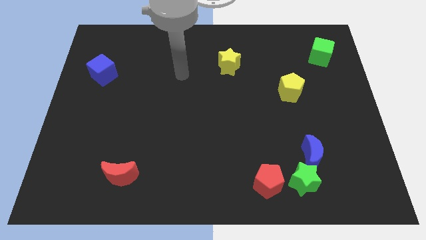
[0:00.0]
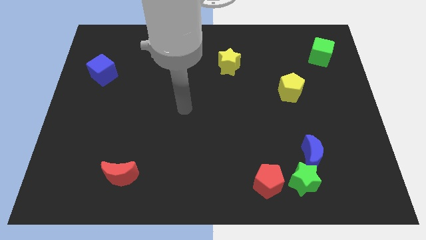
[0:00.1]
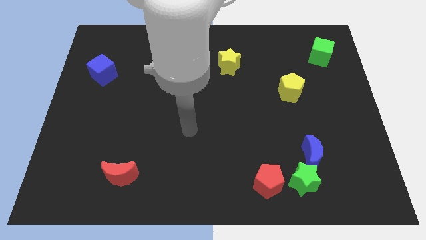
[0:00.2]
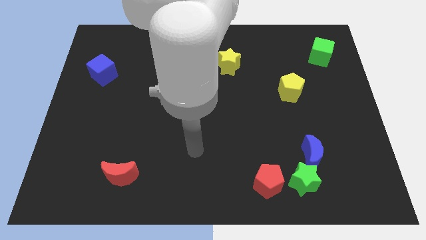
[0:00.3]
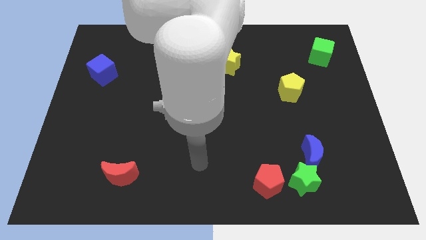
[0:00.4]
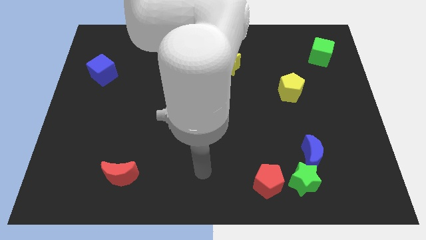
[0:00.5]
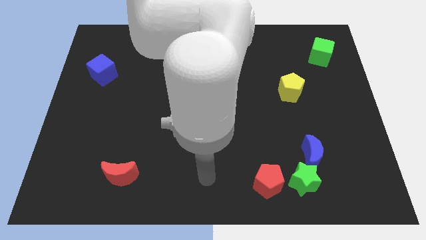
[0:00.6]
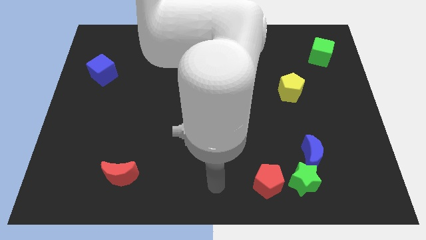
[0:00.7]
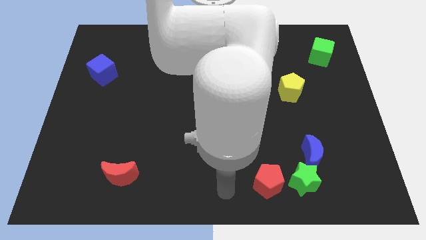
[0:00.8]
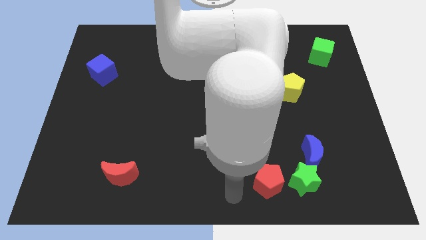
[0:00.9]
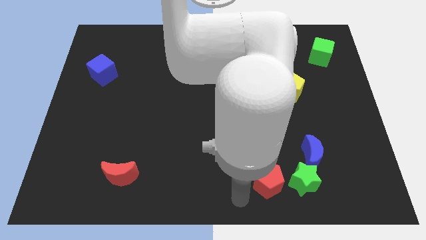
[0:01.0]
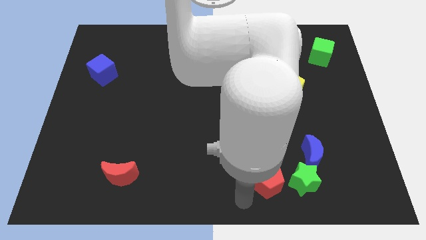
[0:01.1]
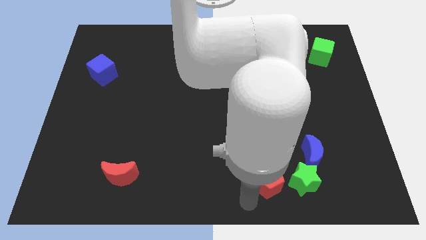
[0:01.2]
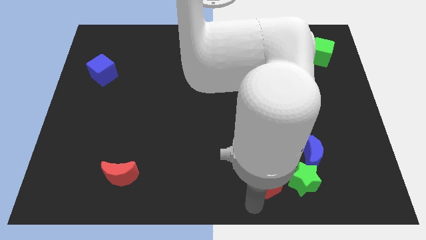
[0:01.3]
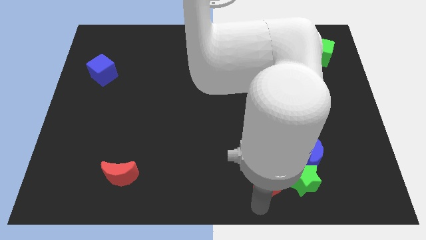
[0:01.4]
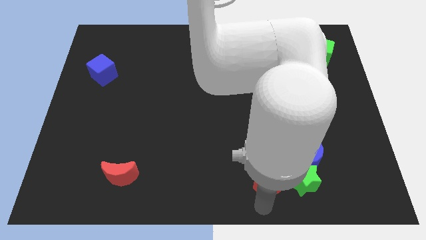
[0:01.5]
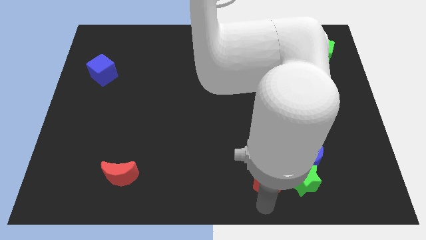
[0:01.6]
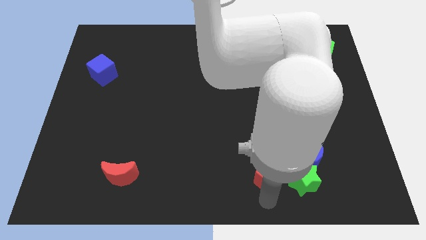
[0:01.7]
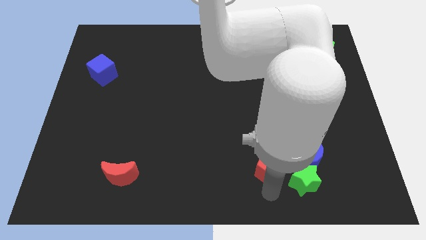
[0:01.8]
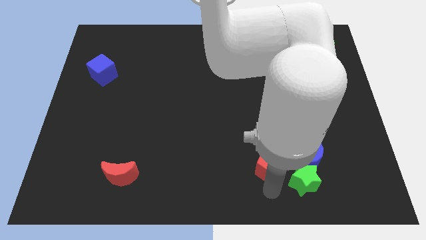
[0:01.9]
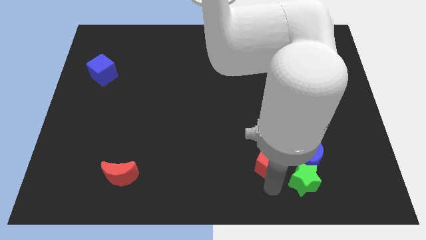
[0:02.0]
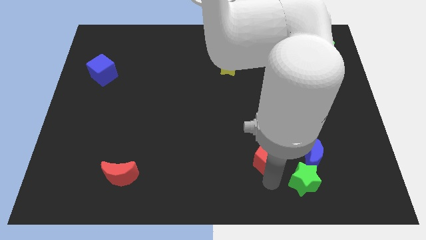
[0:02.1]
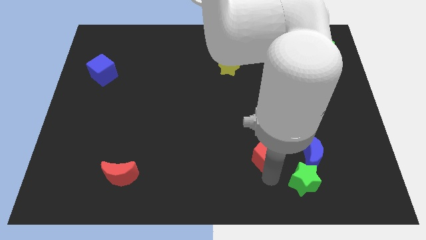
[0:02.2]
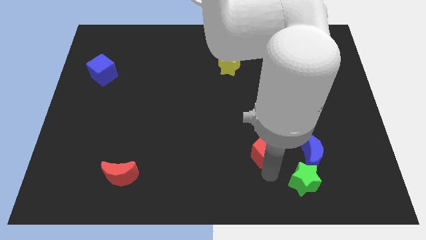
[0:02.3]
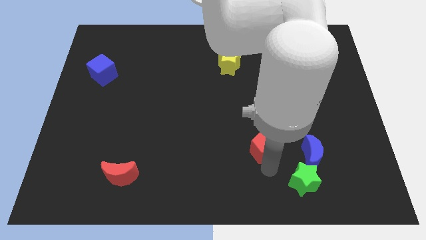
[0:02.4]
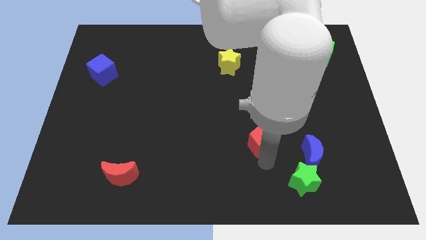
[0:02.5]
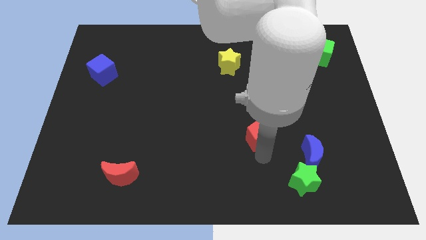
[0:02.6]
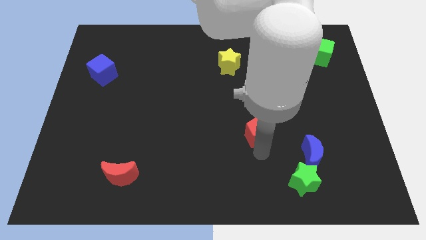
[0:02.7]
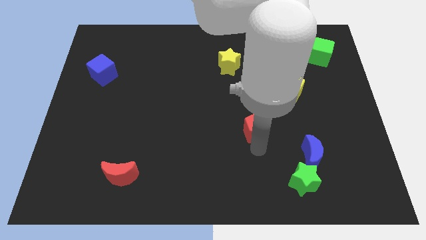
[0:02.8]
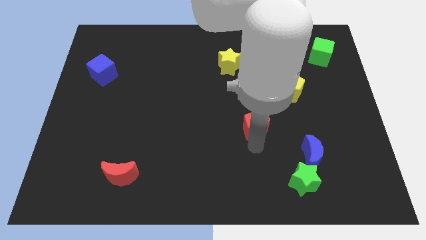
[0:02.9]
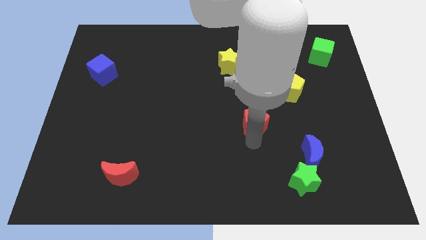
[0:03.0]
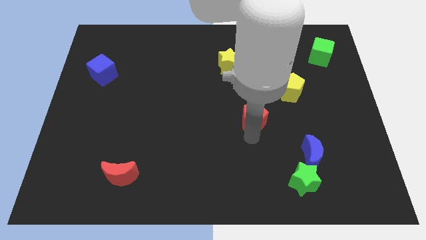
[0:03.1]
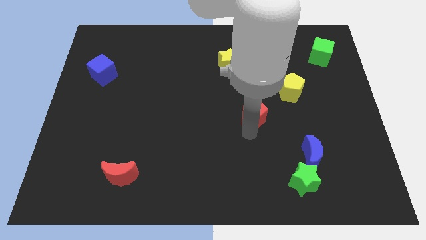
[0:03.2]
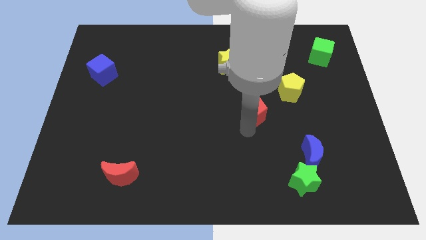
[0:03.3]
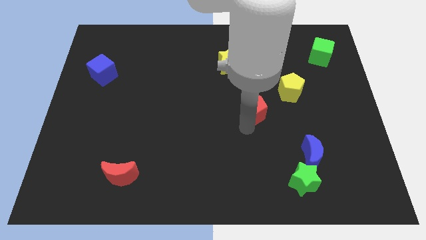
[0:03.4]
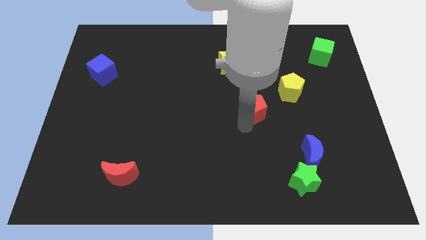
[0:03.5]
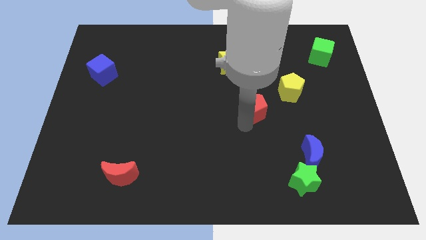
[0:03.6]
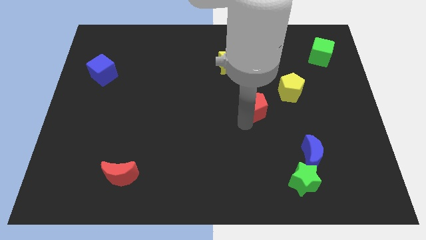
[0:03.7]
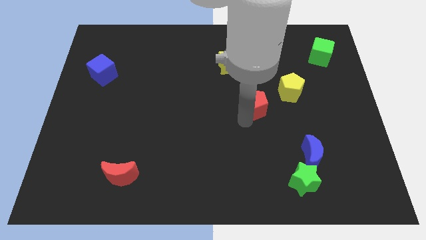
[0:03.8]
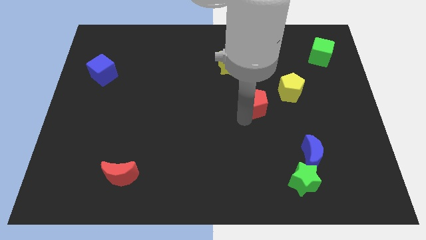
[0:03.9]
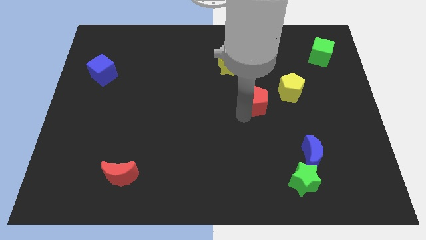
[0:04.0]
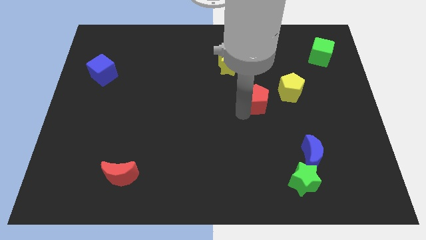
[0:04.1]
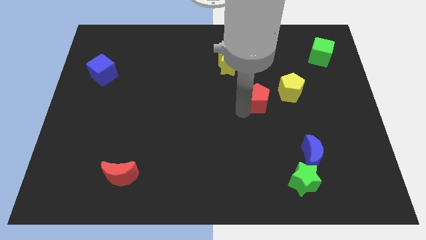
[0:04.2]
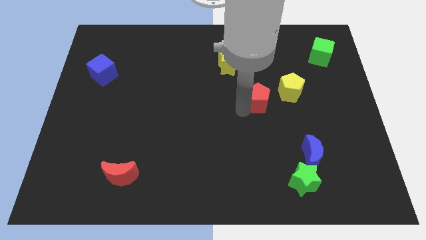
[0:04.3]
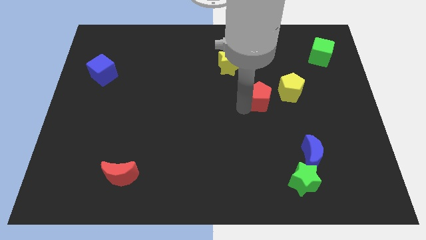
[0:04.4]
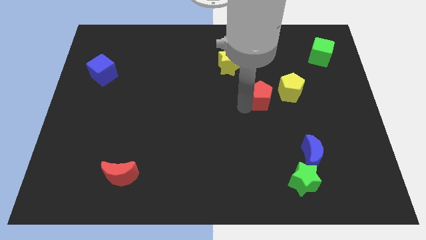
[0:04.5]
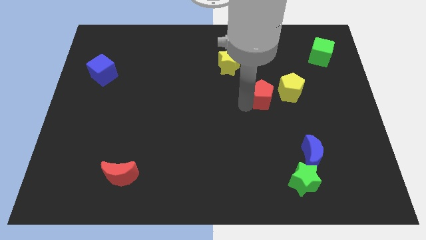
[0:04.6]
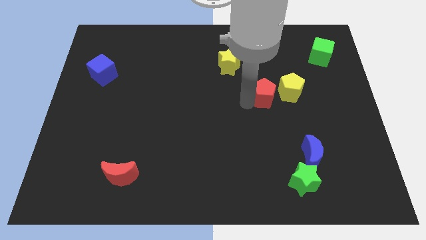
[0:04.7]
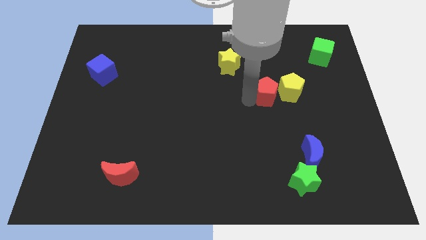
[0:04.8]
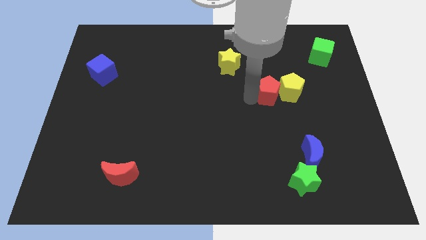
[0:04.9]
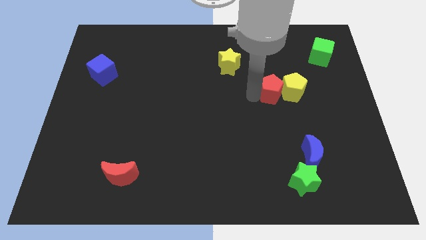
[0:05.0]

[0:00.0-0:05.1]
put the red pentagon next to the yellow pentagon

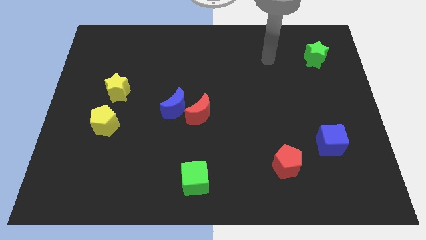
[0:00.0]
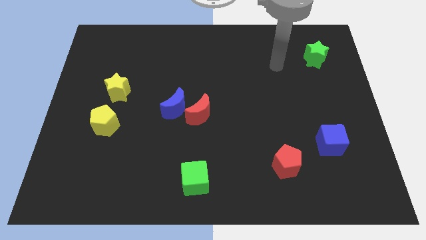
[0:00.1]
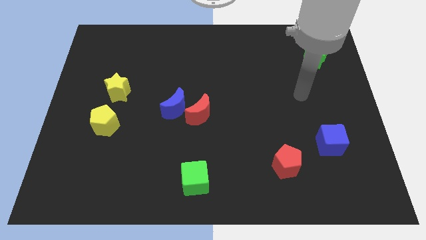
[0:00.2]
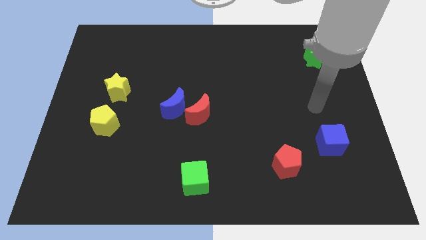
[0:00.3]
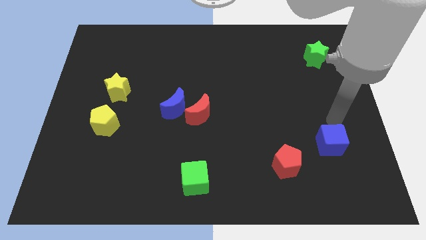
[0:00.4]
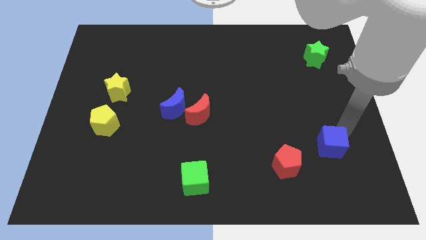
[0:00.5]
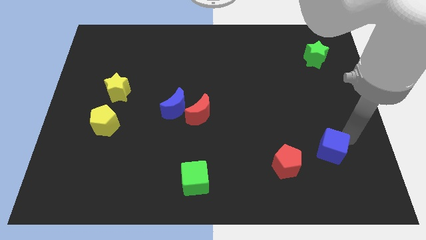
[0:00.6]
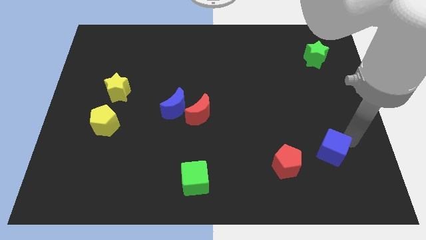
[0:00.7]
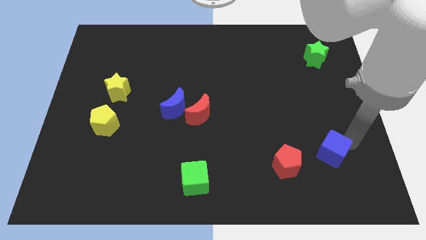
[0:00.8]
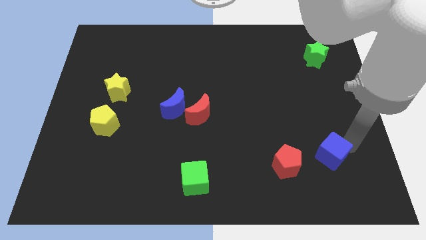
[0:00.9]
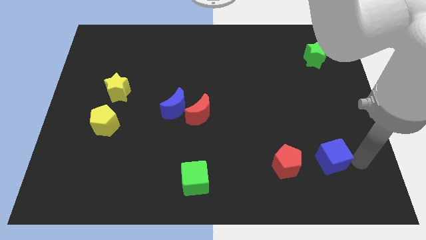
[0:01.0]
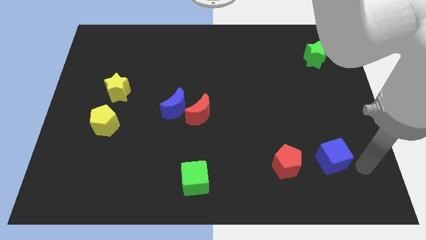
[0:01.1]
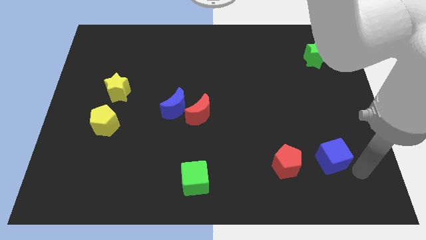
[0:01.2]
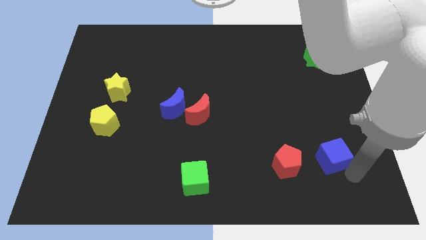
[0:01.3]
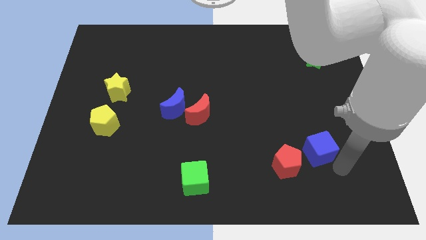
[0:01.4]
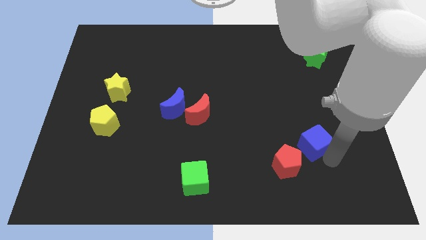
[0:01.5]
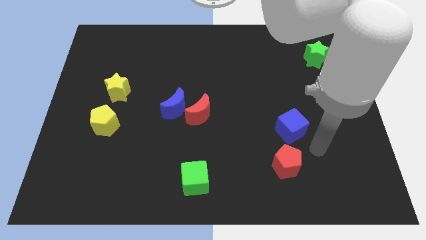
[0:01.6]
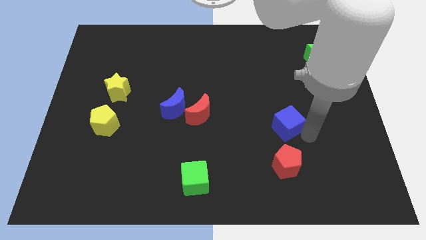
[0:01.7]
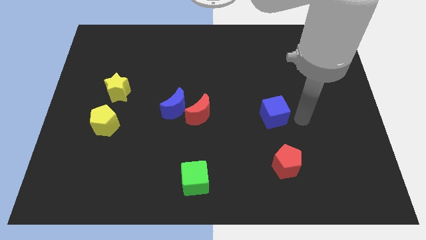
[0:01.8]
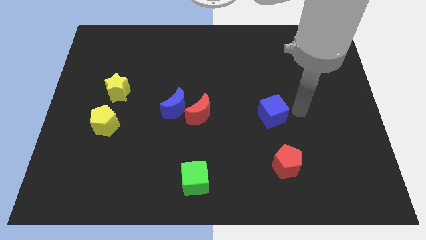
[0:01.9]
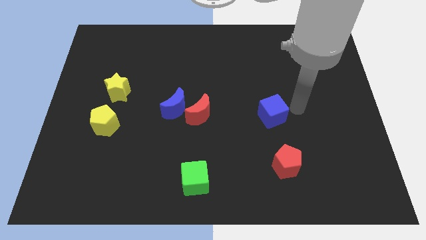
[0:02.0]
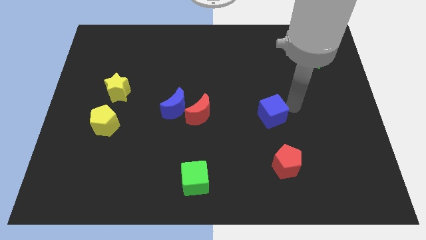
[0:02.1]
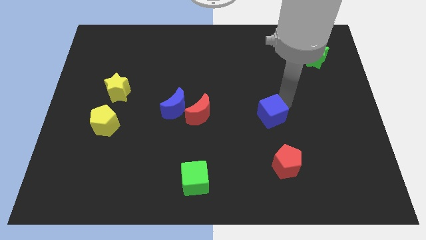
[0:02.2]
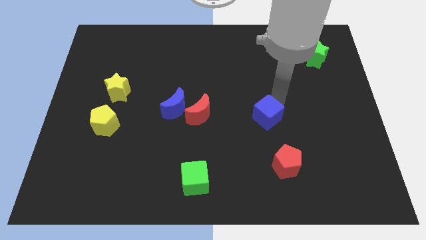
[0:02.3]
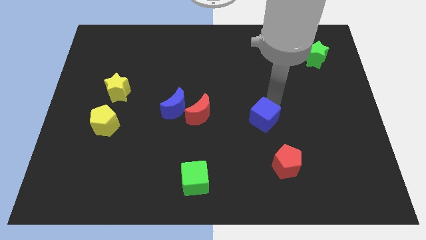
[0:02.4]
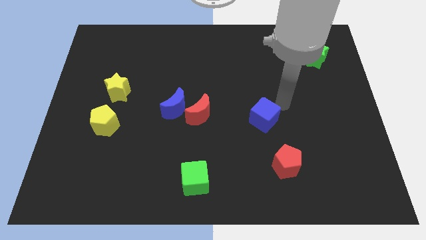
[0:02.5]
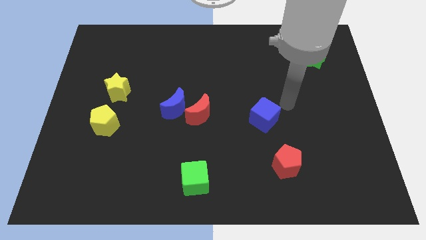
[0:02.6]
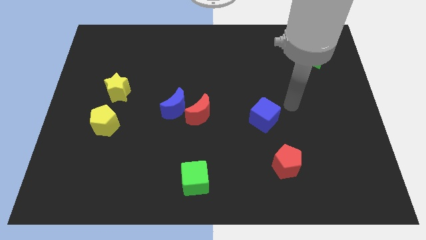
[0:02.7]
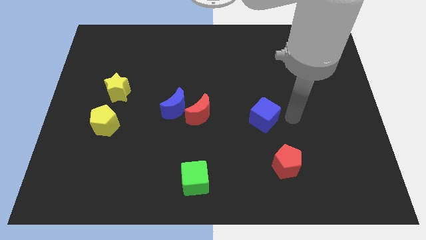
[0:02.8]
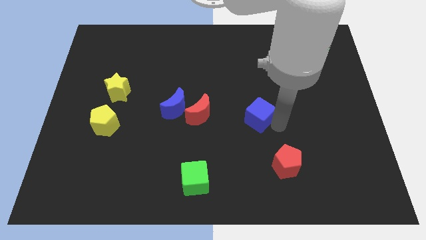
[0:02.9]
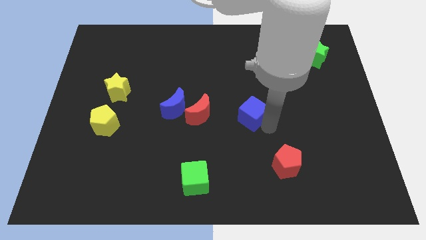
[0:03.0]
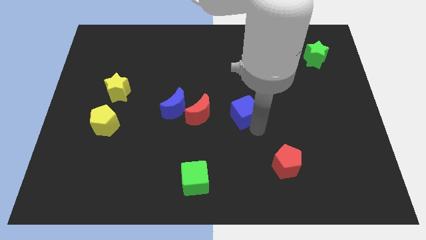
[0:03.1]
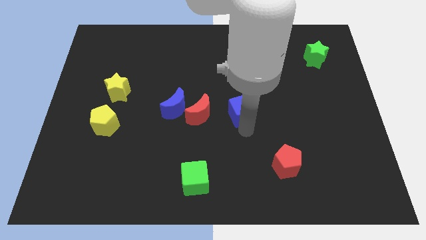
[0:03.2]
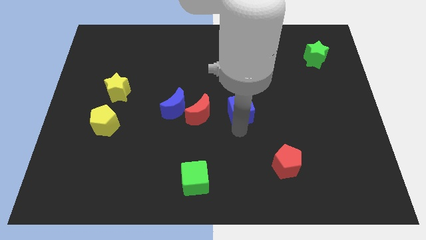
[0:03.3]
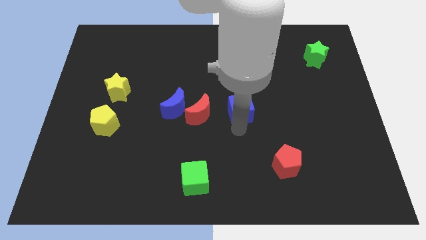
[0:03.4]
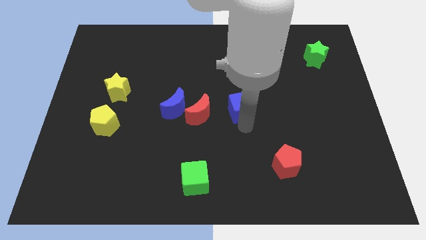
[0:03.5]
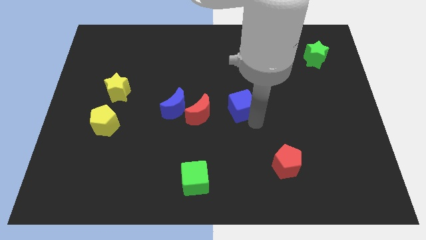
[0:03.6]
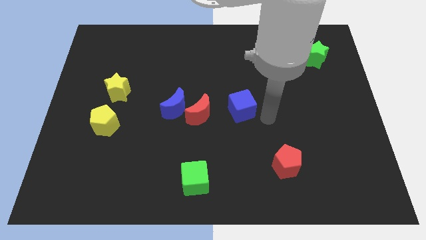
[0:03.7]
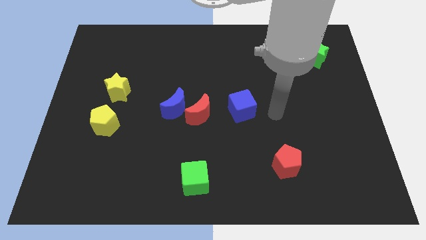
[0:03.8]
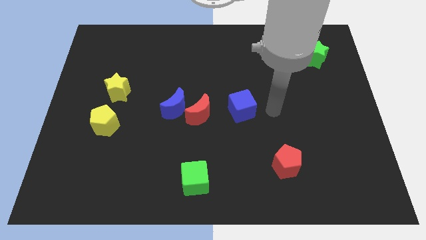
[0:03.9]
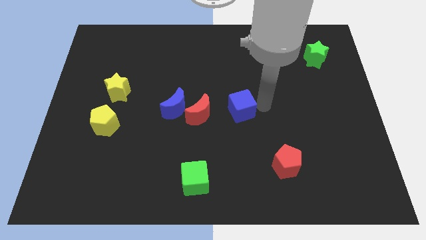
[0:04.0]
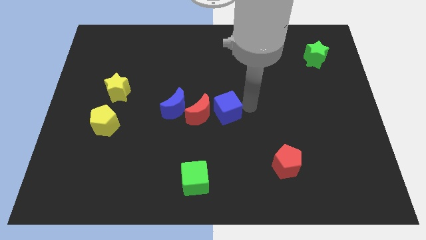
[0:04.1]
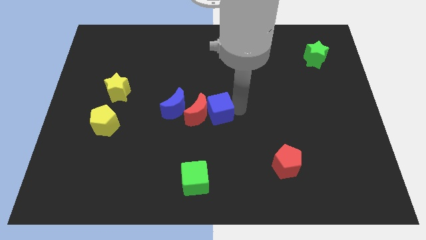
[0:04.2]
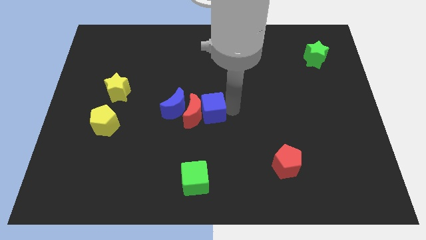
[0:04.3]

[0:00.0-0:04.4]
slide the blue cube towards the red moon
